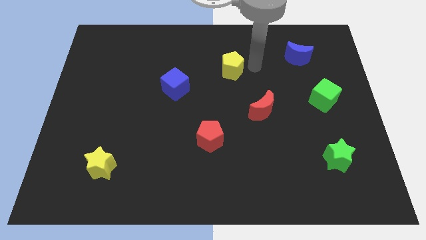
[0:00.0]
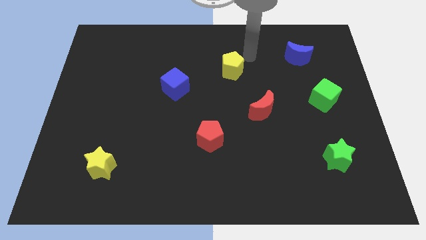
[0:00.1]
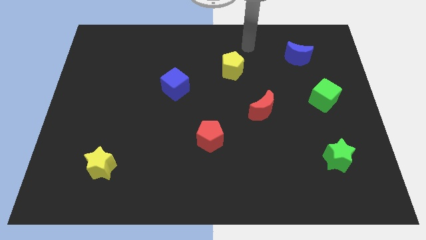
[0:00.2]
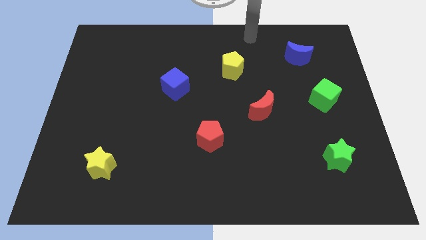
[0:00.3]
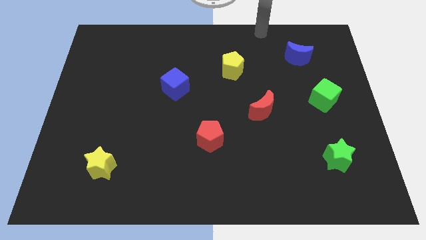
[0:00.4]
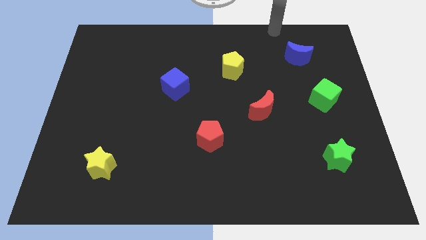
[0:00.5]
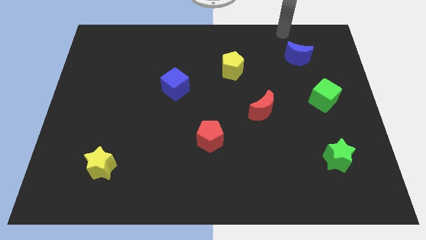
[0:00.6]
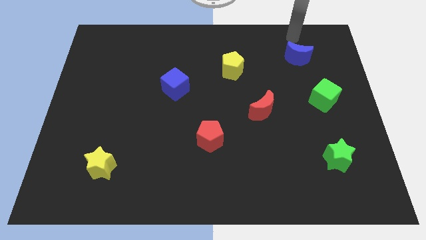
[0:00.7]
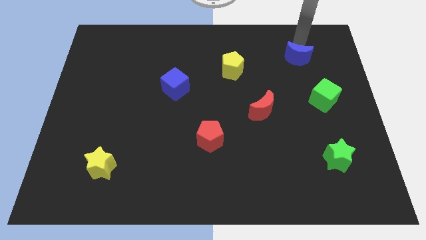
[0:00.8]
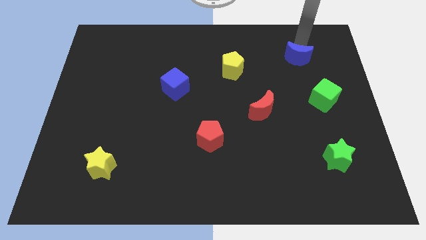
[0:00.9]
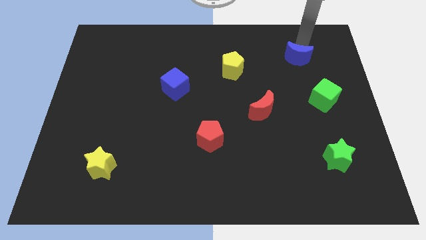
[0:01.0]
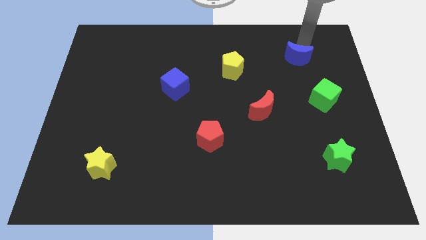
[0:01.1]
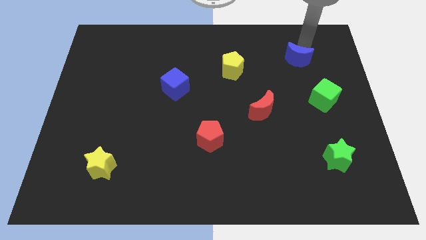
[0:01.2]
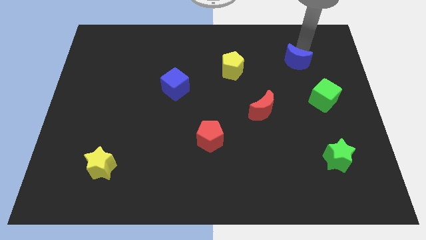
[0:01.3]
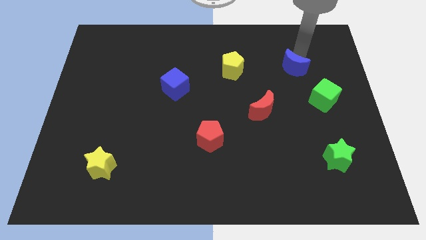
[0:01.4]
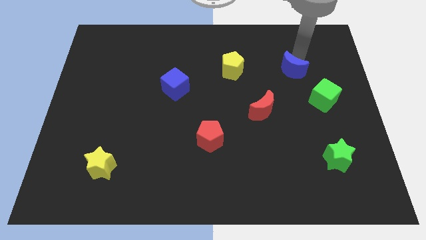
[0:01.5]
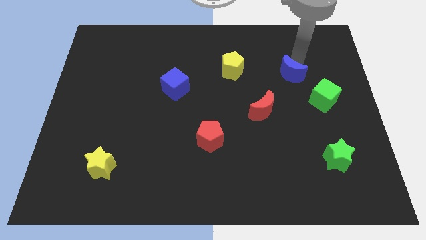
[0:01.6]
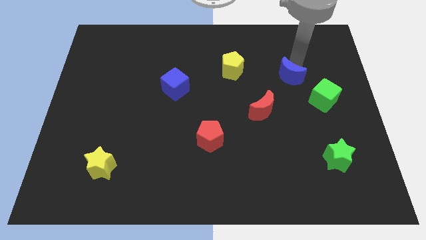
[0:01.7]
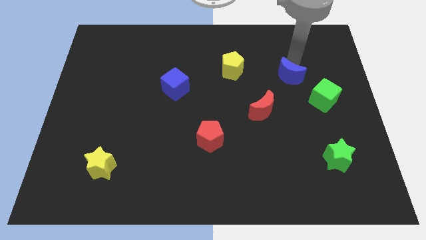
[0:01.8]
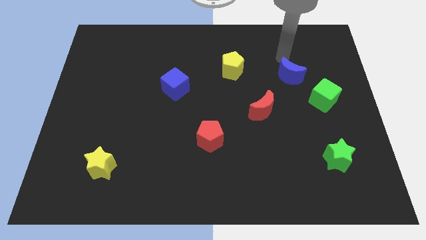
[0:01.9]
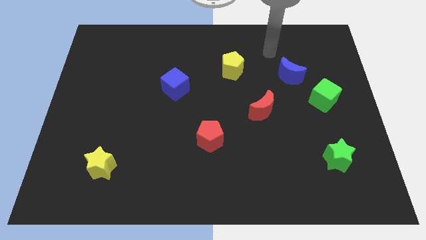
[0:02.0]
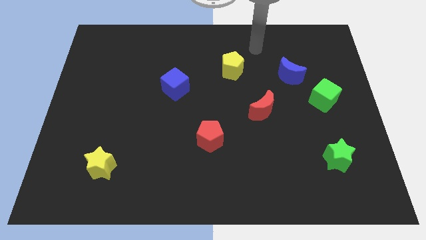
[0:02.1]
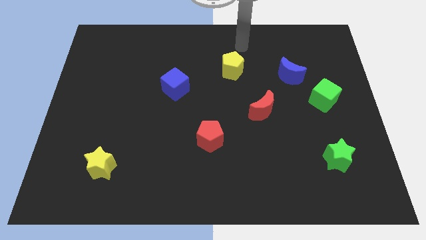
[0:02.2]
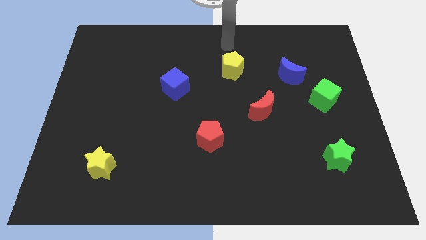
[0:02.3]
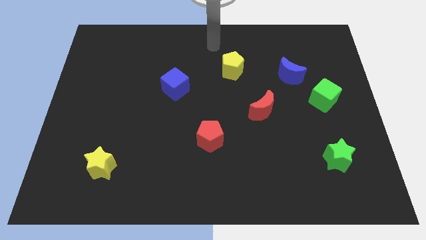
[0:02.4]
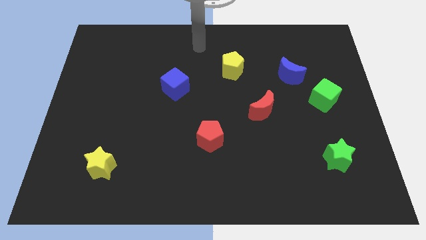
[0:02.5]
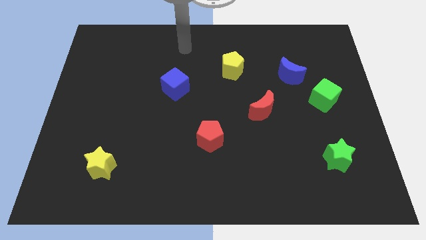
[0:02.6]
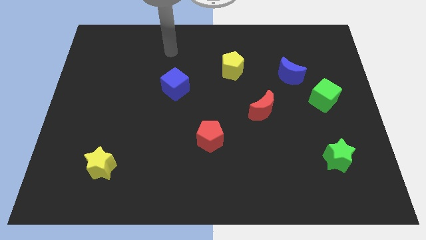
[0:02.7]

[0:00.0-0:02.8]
move the blue crescent towards the red moon and go away

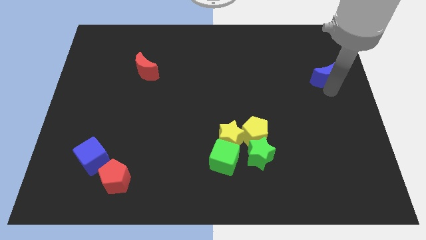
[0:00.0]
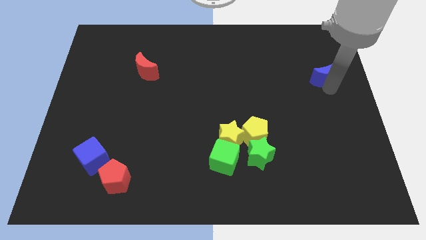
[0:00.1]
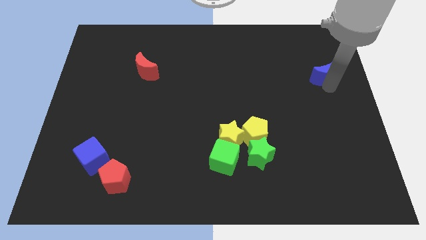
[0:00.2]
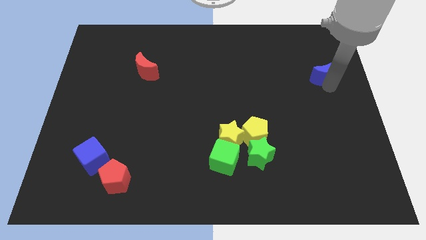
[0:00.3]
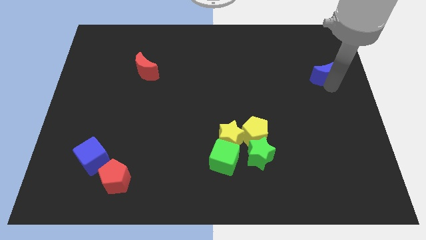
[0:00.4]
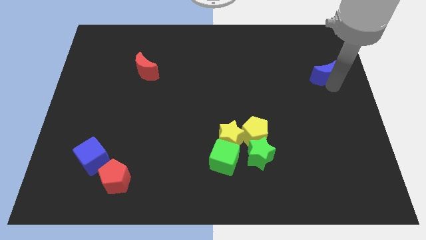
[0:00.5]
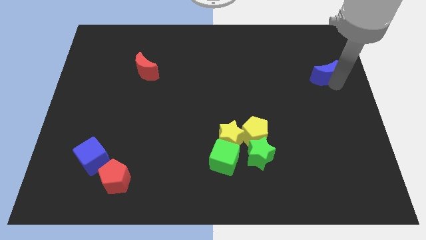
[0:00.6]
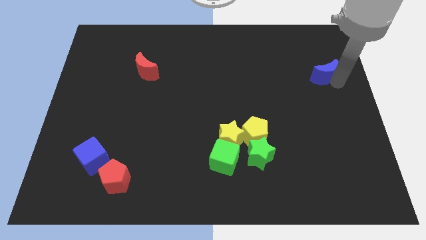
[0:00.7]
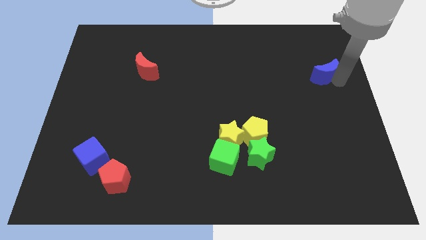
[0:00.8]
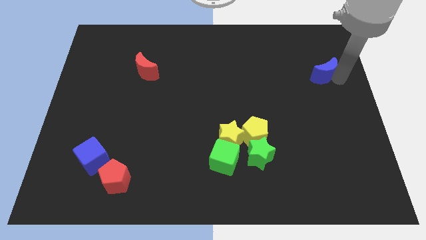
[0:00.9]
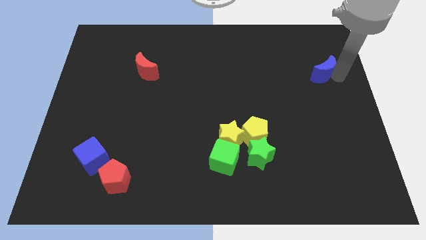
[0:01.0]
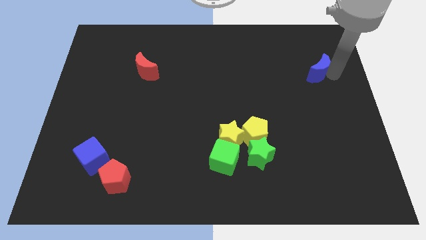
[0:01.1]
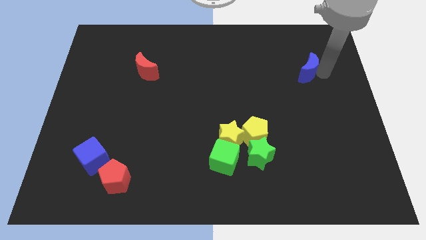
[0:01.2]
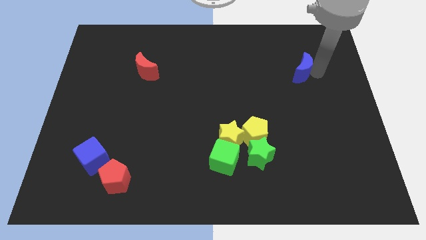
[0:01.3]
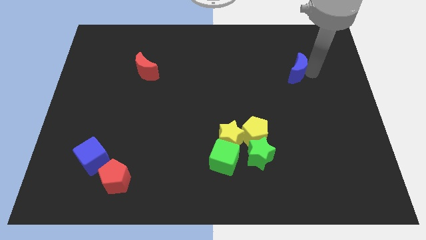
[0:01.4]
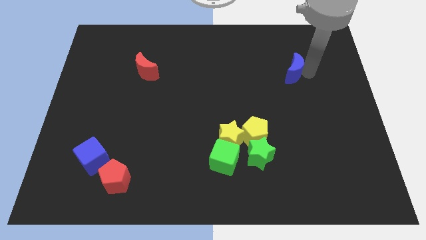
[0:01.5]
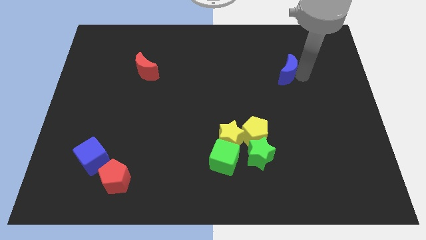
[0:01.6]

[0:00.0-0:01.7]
push the blue crescent to the left of the board

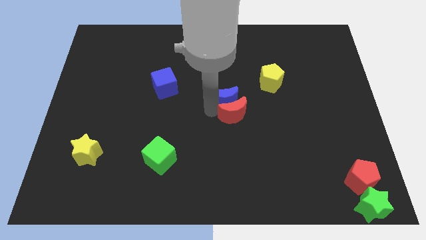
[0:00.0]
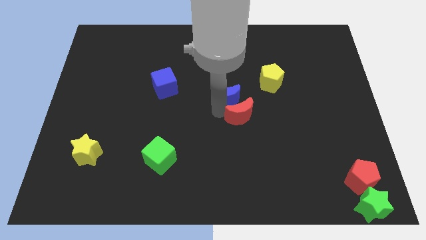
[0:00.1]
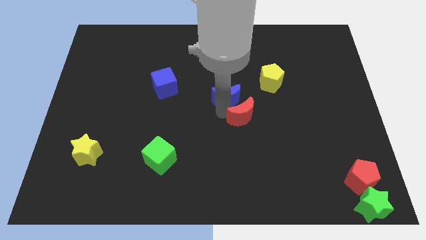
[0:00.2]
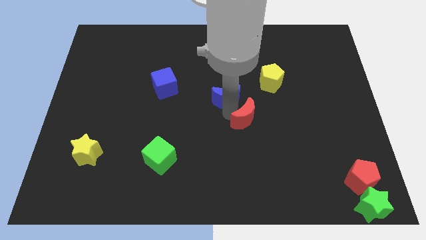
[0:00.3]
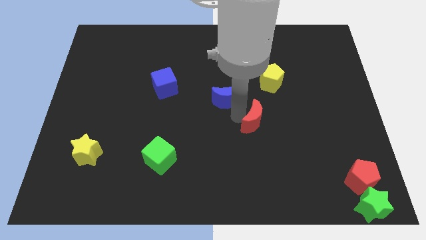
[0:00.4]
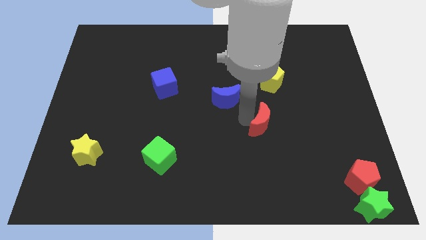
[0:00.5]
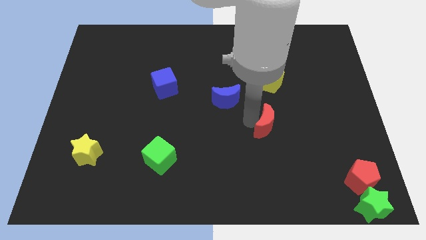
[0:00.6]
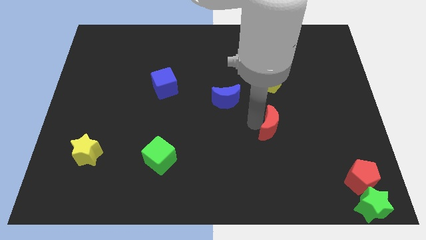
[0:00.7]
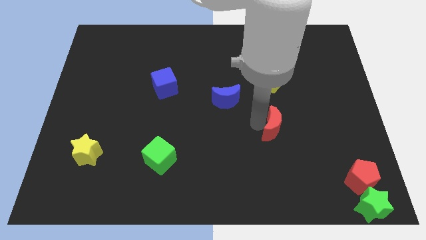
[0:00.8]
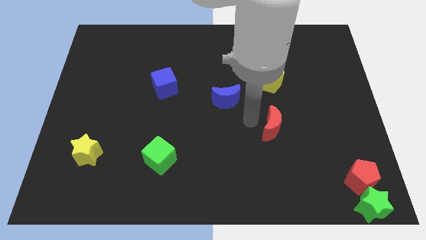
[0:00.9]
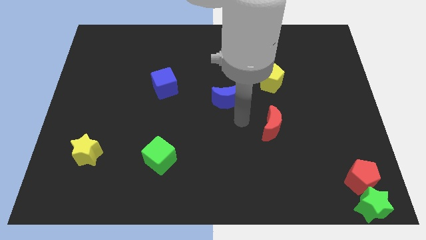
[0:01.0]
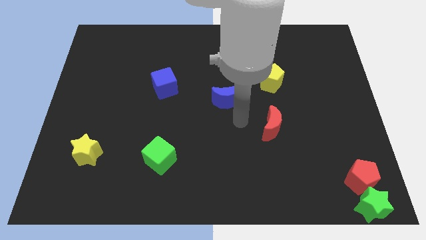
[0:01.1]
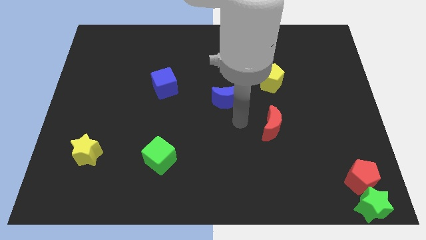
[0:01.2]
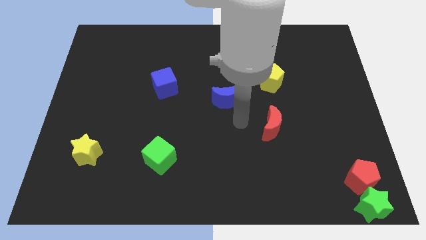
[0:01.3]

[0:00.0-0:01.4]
separate the red moon from the blue moon

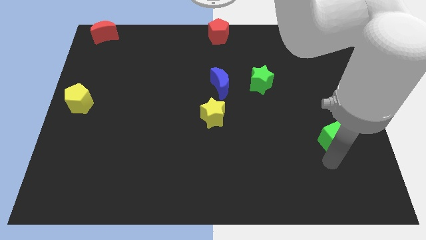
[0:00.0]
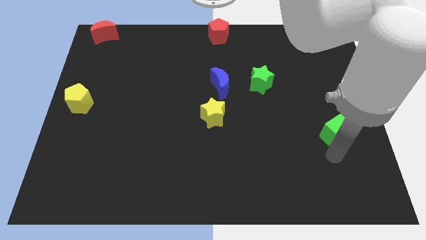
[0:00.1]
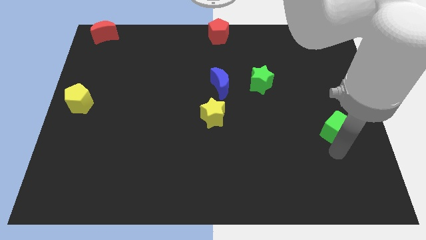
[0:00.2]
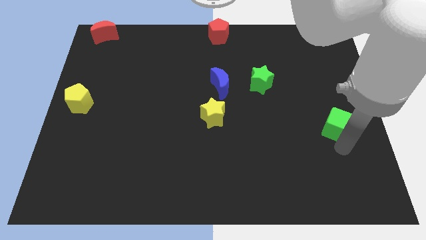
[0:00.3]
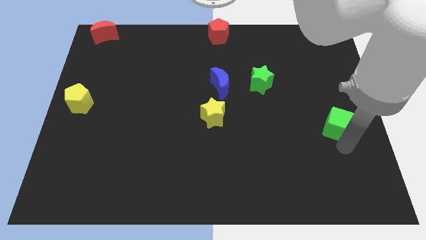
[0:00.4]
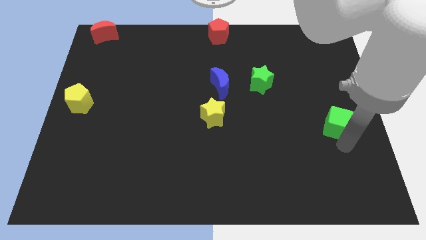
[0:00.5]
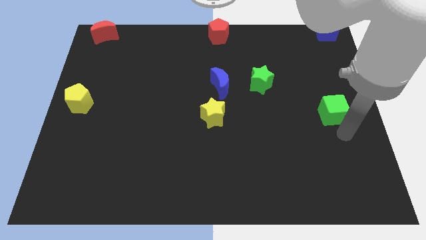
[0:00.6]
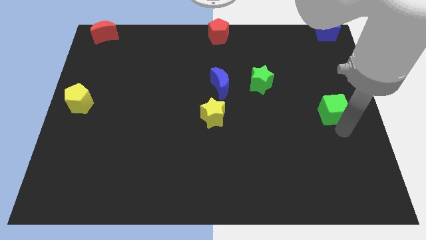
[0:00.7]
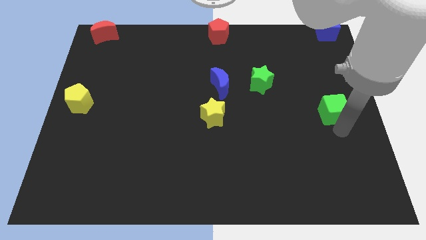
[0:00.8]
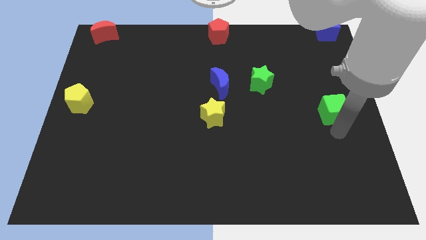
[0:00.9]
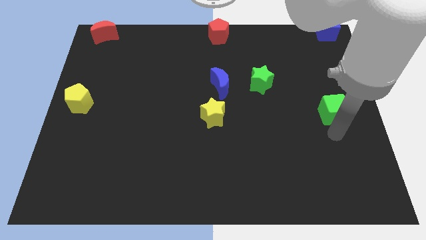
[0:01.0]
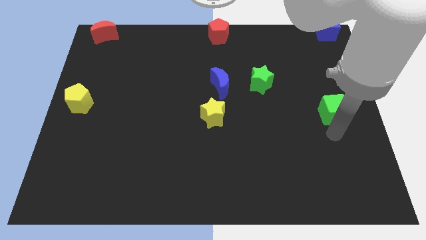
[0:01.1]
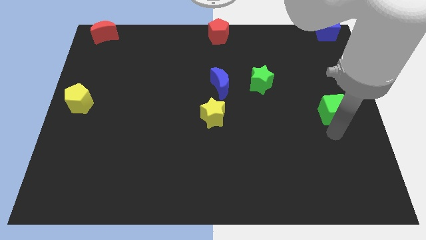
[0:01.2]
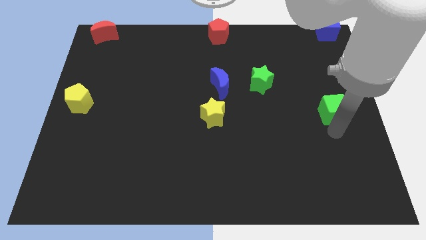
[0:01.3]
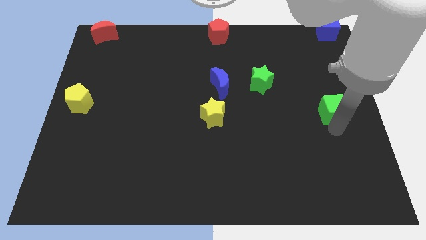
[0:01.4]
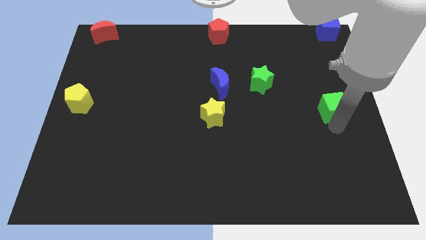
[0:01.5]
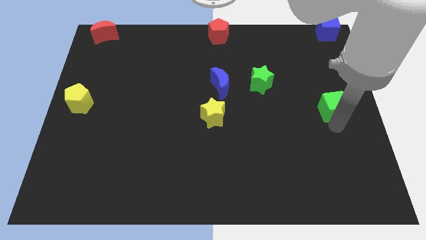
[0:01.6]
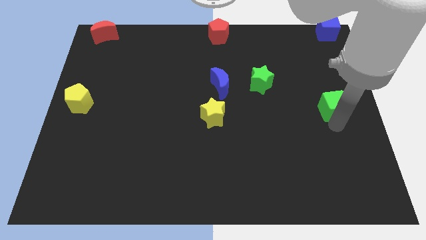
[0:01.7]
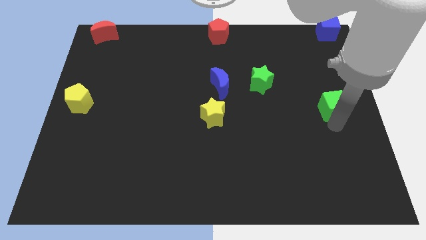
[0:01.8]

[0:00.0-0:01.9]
push green cube slightly towards top side of the board

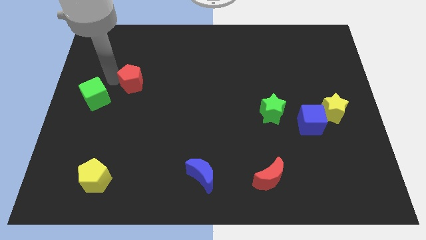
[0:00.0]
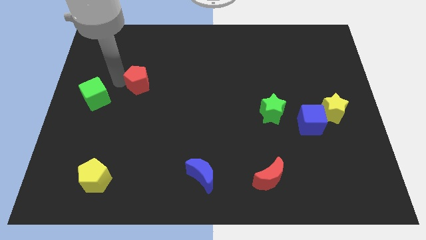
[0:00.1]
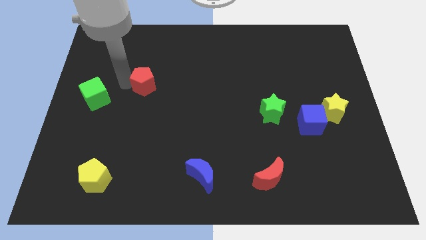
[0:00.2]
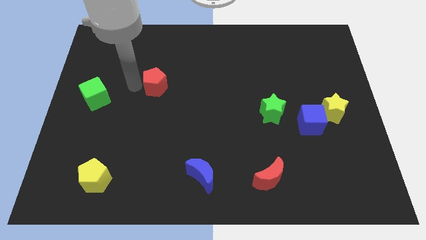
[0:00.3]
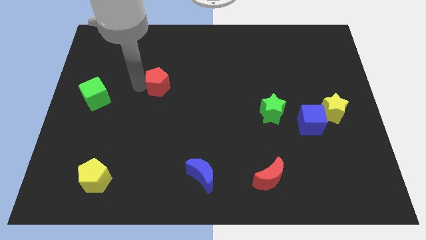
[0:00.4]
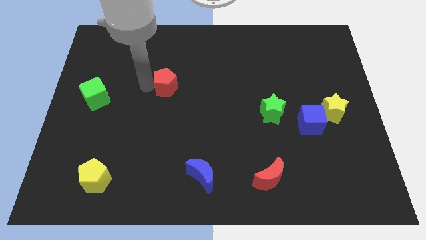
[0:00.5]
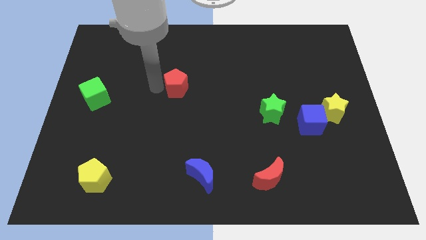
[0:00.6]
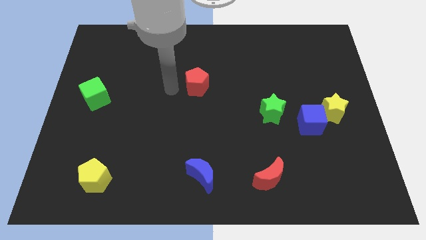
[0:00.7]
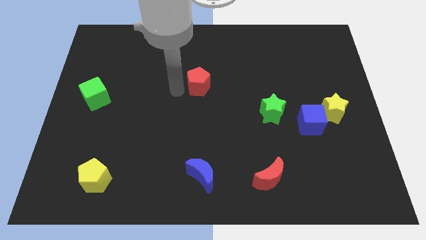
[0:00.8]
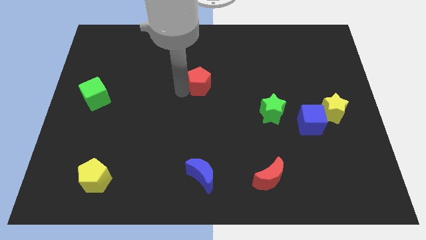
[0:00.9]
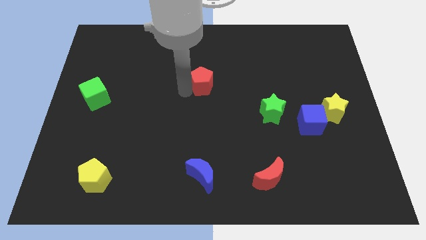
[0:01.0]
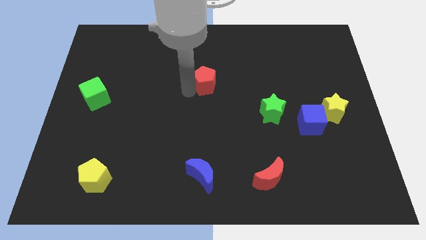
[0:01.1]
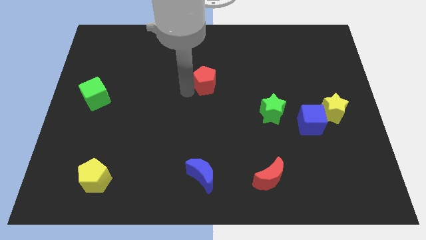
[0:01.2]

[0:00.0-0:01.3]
place red pentagon vertically above blue moon
